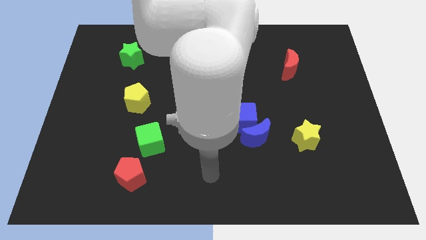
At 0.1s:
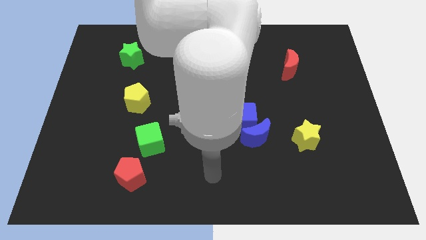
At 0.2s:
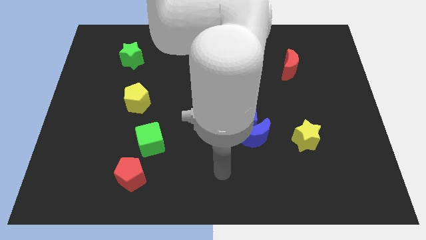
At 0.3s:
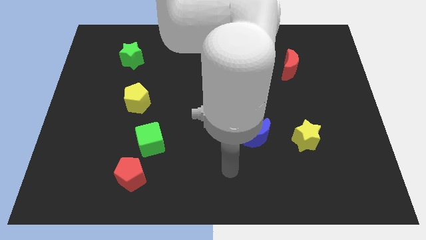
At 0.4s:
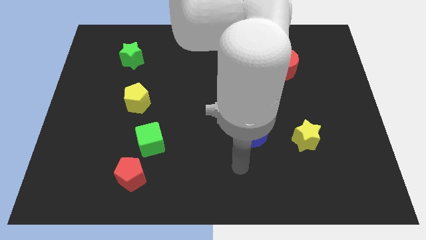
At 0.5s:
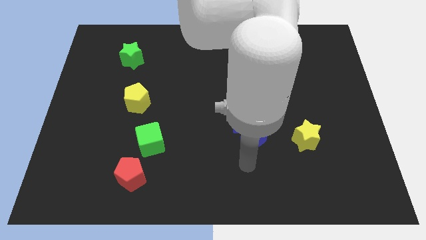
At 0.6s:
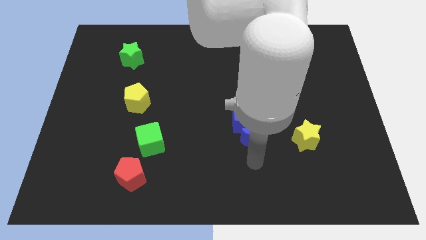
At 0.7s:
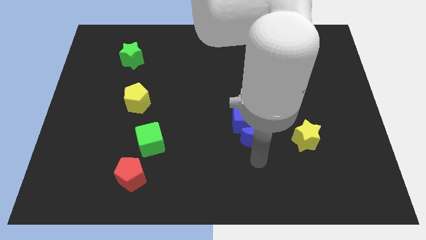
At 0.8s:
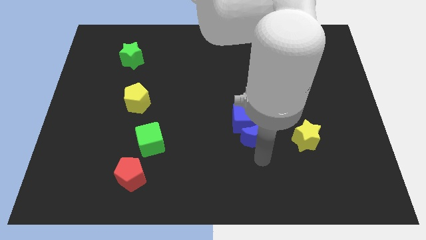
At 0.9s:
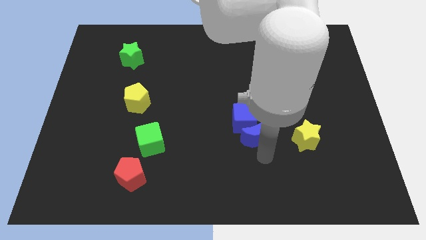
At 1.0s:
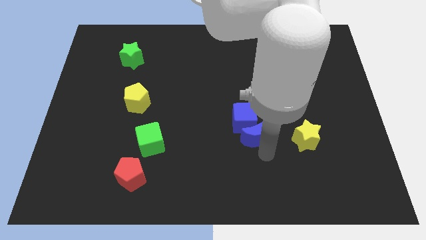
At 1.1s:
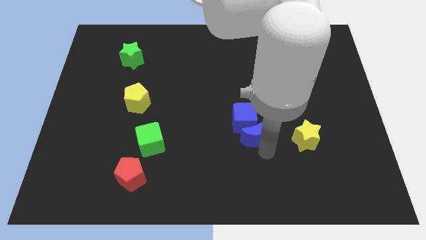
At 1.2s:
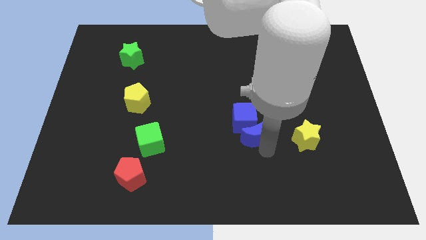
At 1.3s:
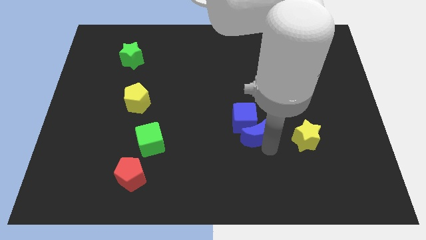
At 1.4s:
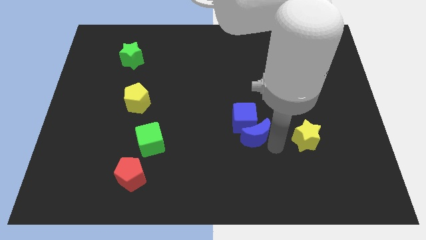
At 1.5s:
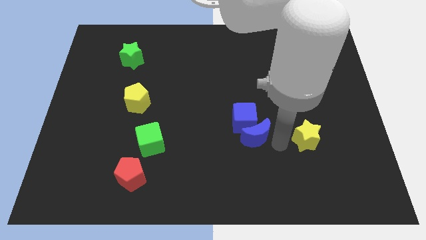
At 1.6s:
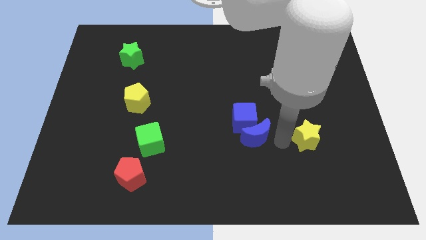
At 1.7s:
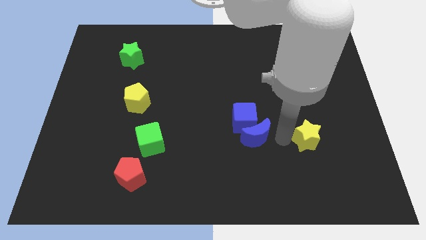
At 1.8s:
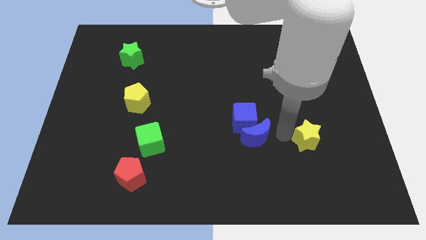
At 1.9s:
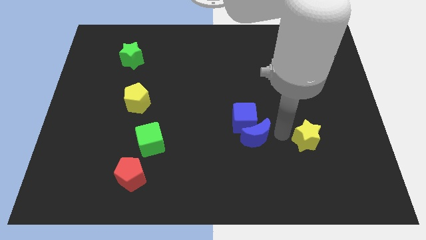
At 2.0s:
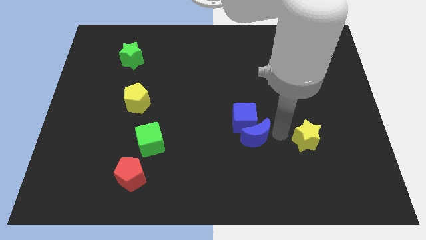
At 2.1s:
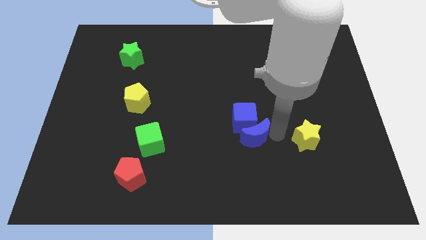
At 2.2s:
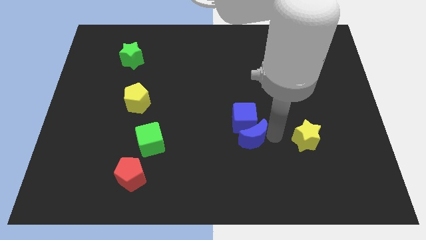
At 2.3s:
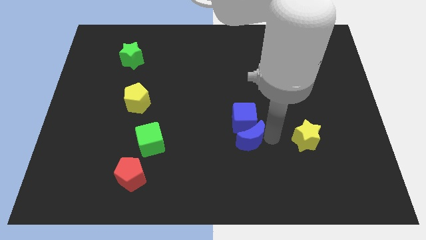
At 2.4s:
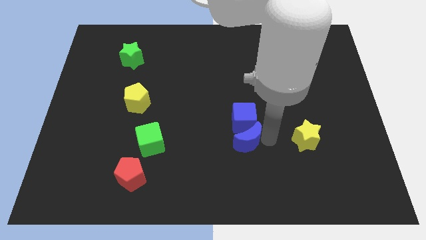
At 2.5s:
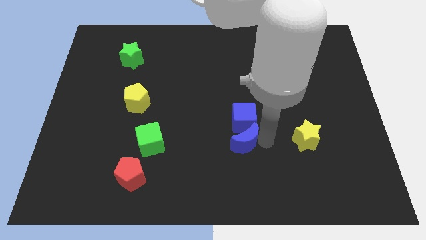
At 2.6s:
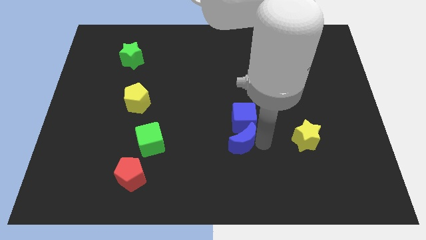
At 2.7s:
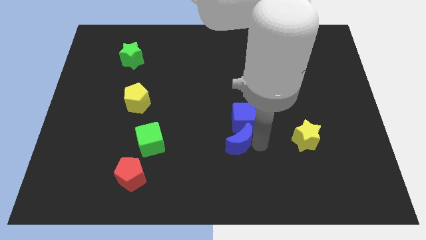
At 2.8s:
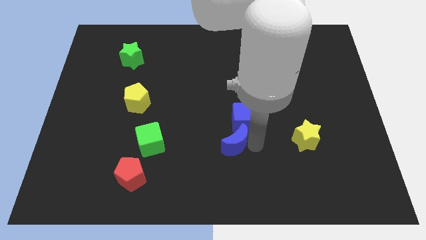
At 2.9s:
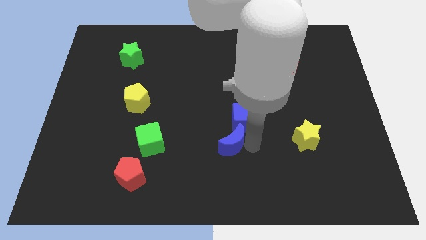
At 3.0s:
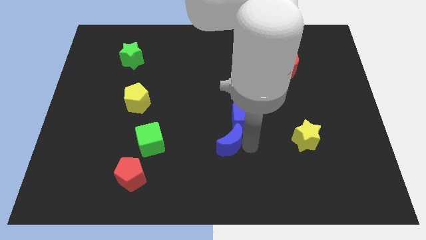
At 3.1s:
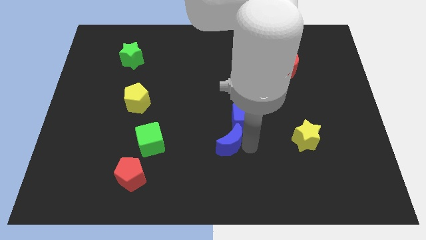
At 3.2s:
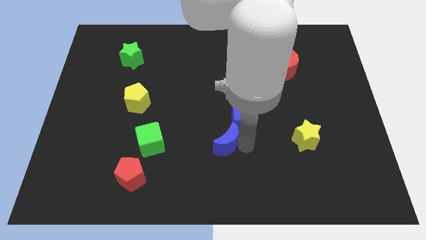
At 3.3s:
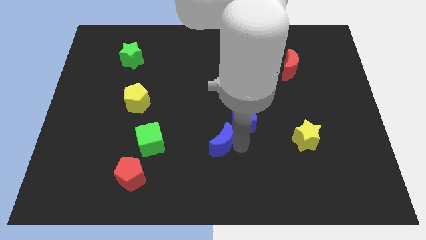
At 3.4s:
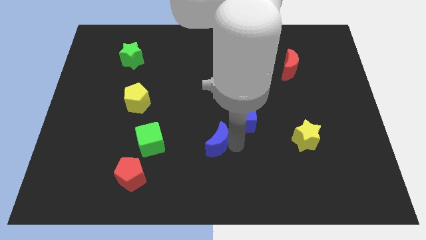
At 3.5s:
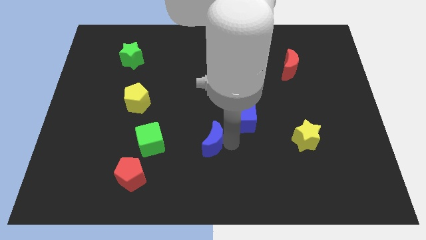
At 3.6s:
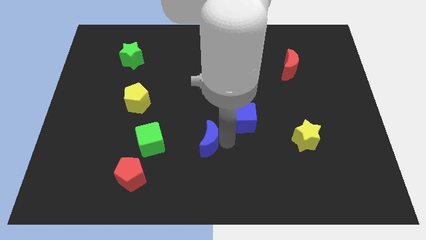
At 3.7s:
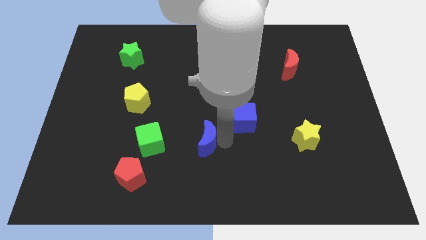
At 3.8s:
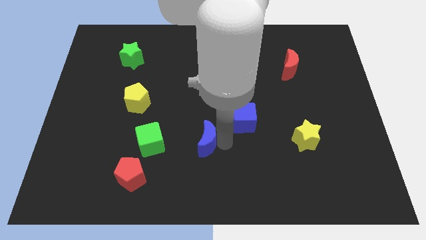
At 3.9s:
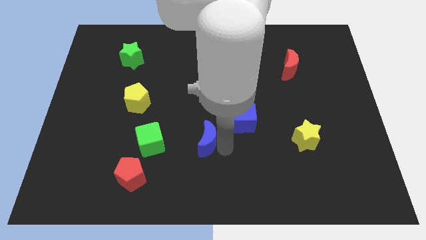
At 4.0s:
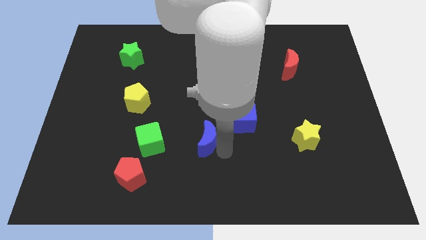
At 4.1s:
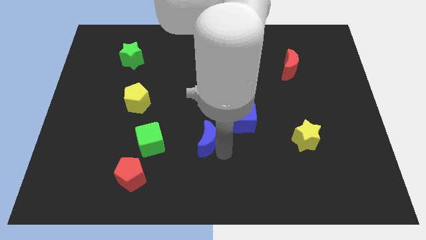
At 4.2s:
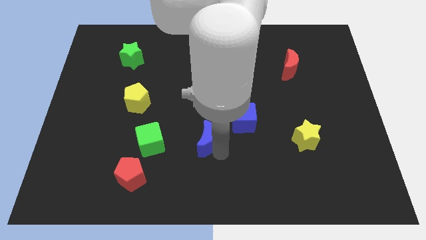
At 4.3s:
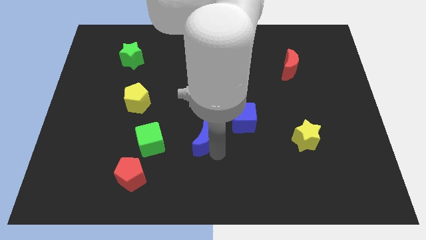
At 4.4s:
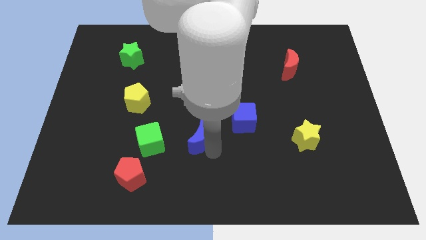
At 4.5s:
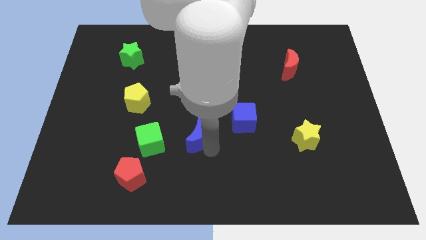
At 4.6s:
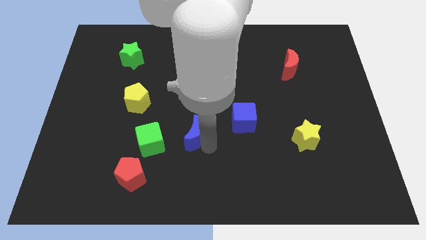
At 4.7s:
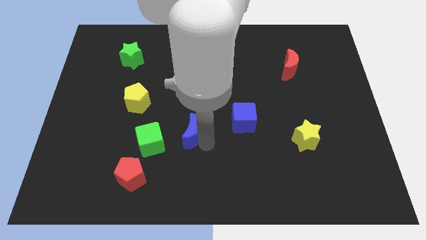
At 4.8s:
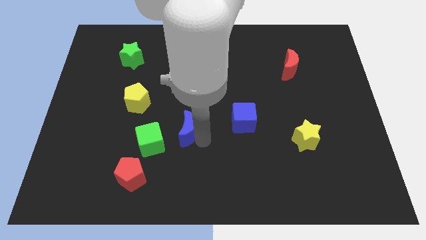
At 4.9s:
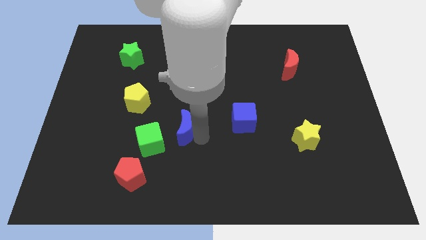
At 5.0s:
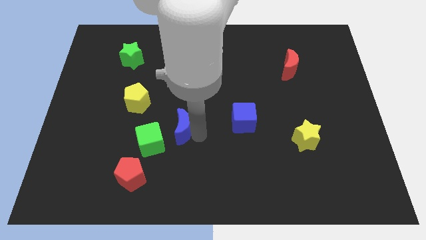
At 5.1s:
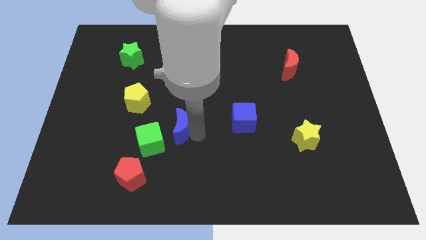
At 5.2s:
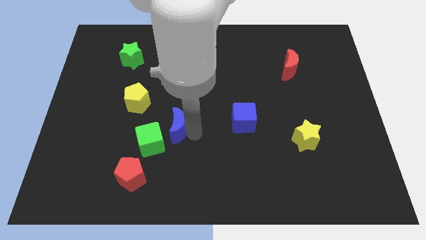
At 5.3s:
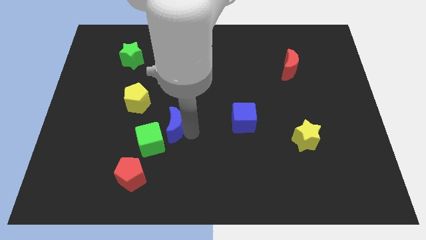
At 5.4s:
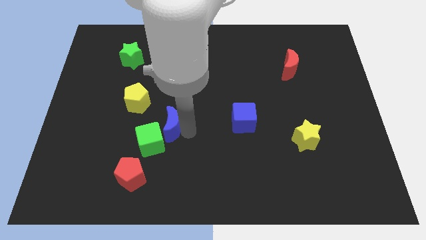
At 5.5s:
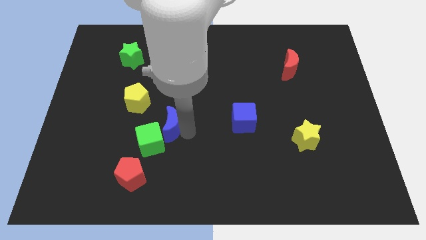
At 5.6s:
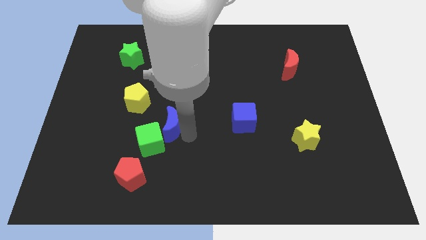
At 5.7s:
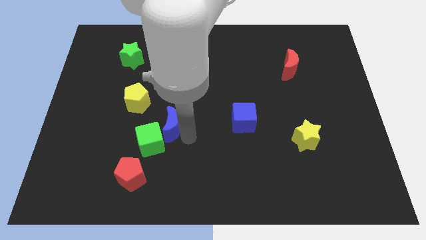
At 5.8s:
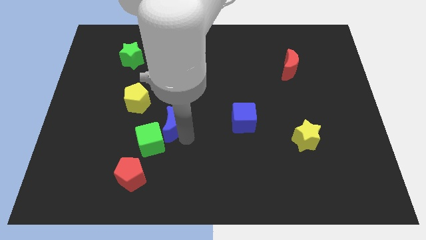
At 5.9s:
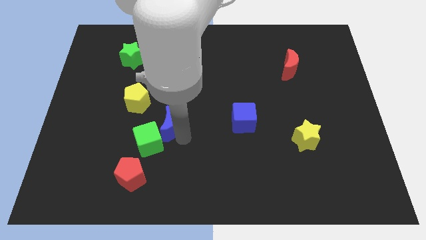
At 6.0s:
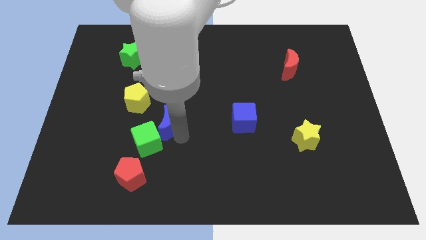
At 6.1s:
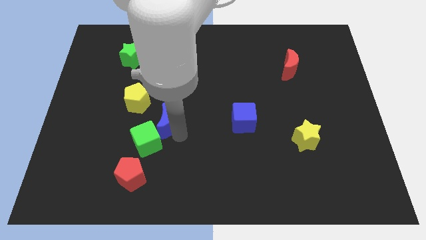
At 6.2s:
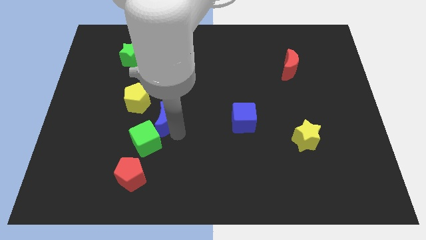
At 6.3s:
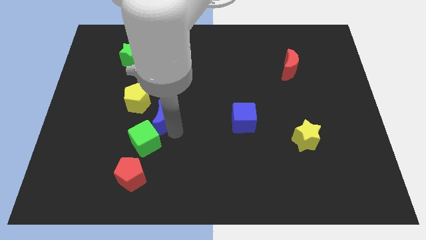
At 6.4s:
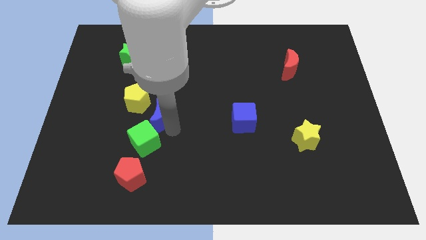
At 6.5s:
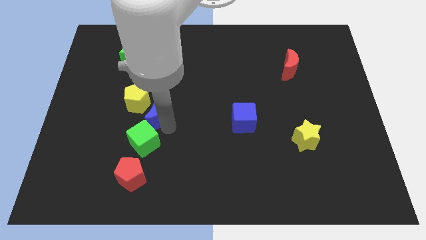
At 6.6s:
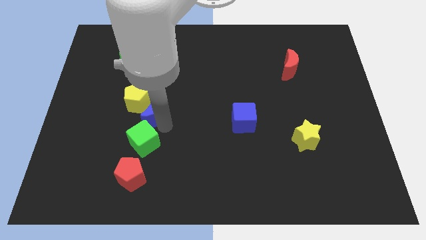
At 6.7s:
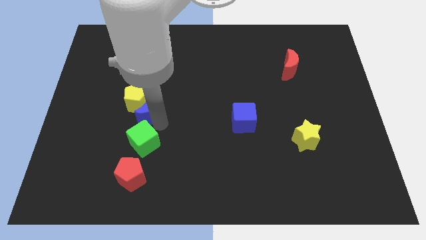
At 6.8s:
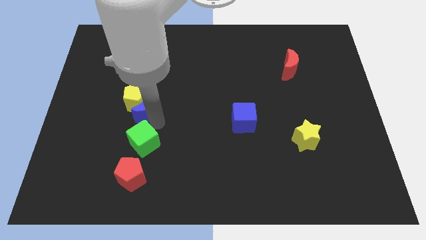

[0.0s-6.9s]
move the blue moon next to the yellow pentagon

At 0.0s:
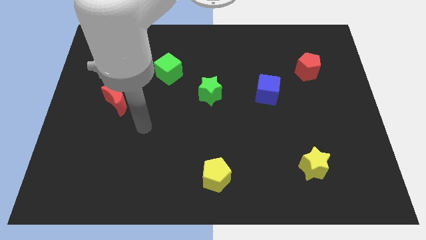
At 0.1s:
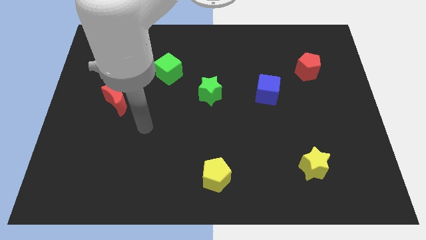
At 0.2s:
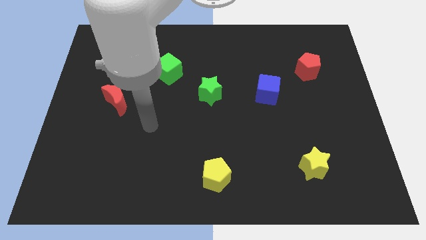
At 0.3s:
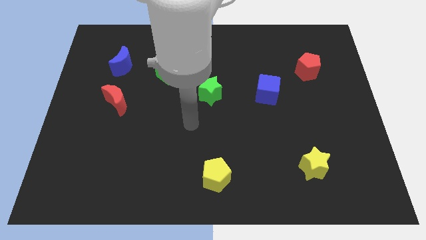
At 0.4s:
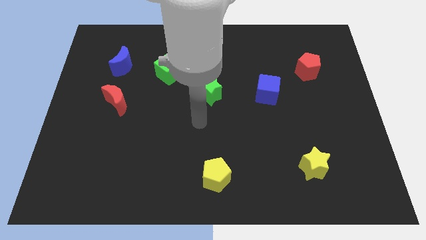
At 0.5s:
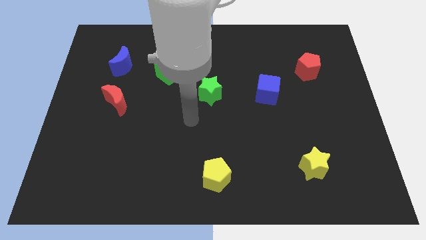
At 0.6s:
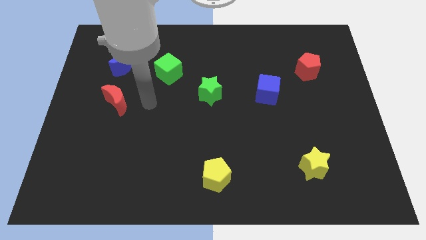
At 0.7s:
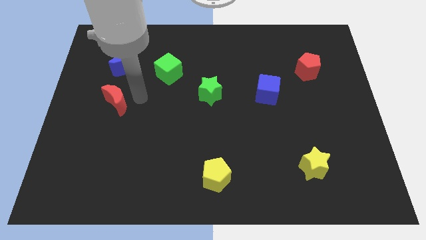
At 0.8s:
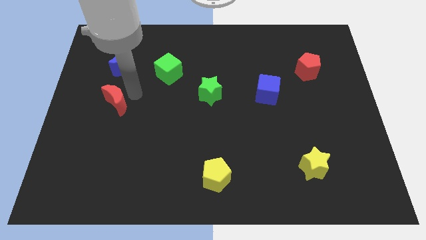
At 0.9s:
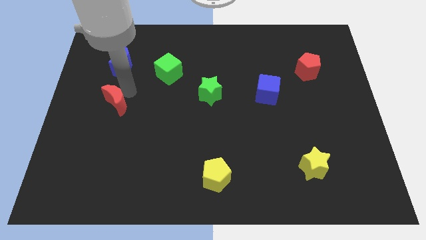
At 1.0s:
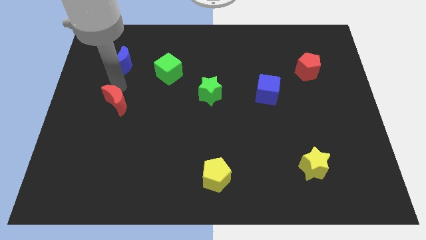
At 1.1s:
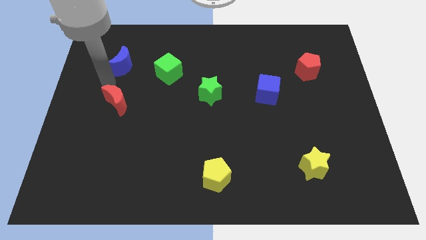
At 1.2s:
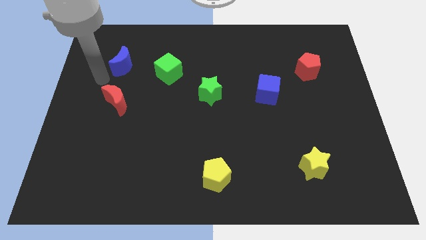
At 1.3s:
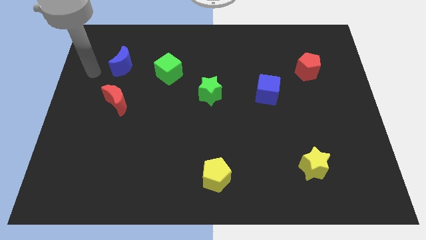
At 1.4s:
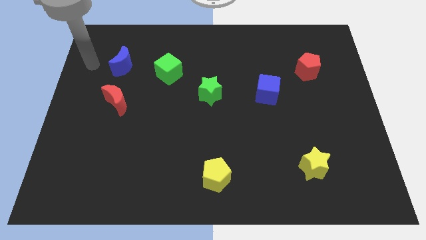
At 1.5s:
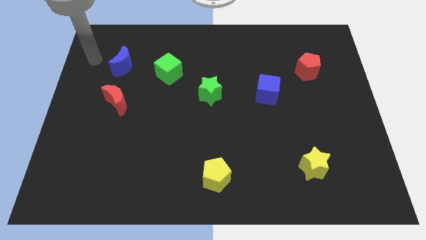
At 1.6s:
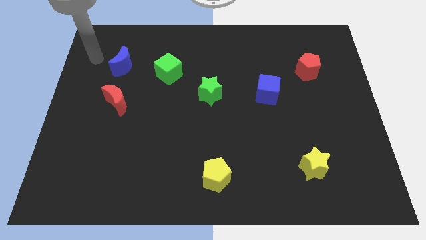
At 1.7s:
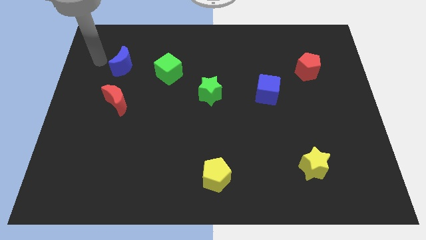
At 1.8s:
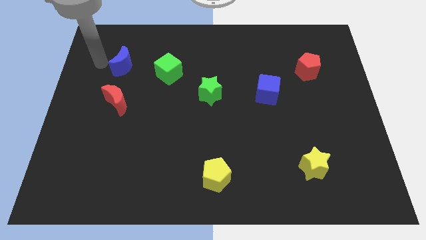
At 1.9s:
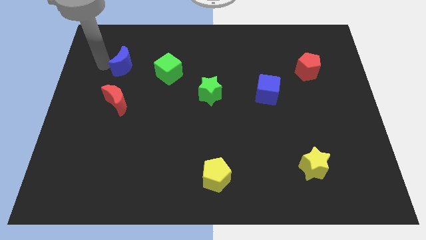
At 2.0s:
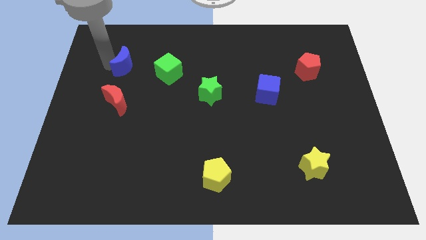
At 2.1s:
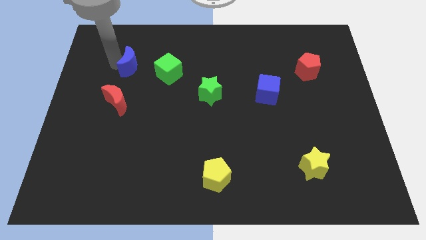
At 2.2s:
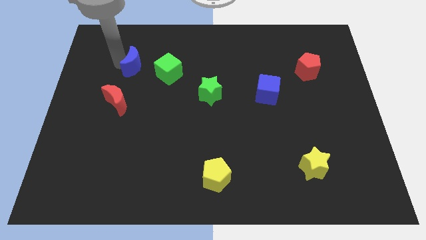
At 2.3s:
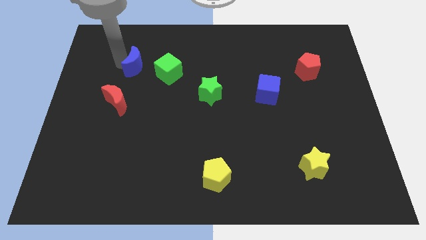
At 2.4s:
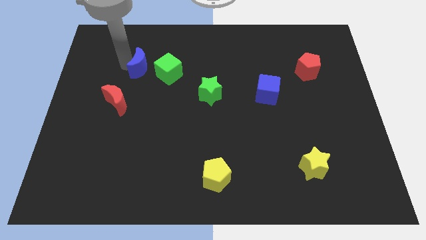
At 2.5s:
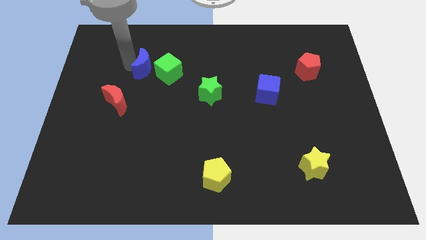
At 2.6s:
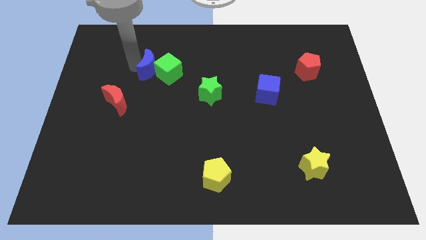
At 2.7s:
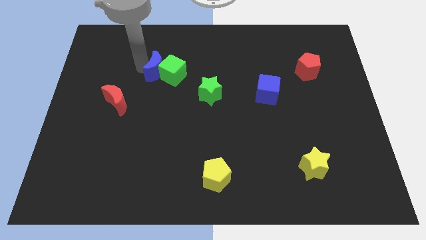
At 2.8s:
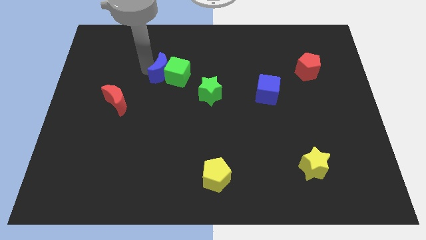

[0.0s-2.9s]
slide the blue moon next to the green cube
